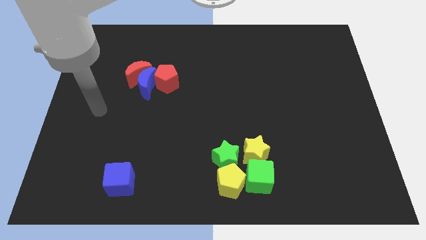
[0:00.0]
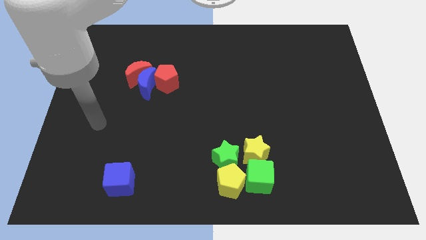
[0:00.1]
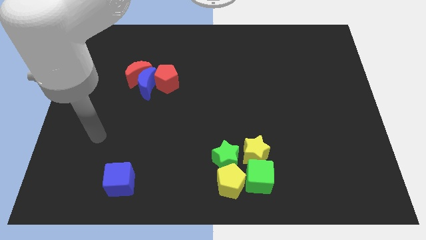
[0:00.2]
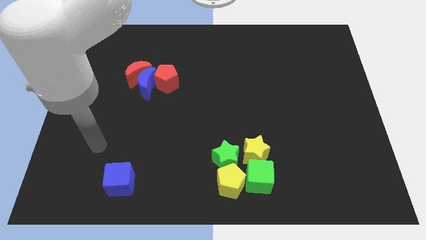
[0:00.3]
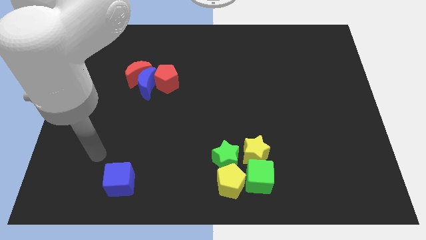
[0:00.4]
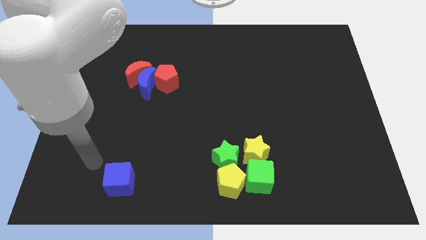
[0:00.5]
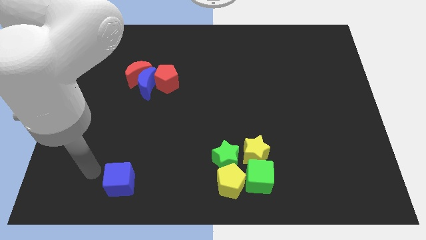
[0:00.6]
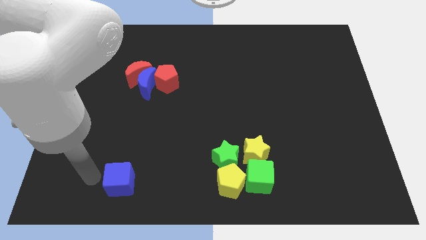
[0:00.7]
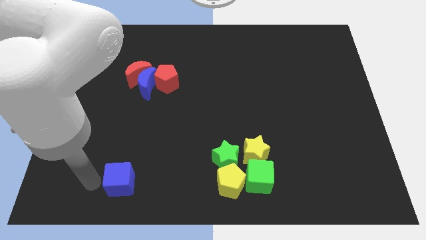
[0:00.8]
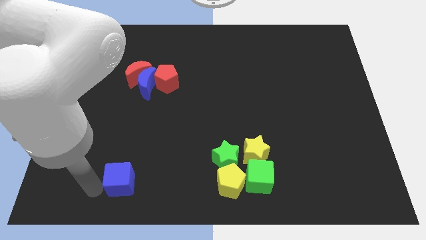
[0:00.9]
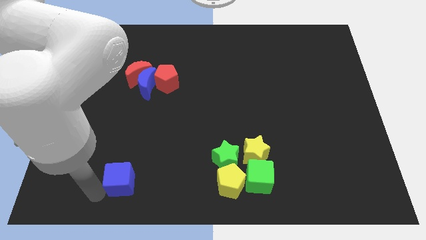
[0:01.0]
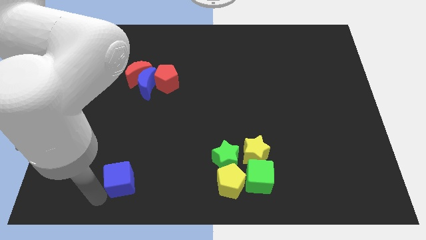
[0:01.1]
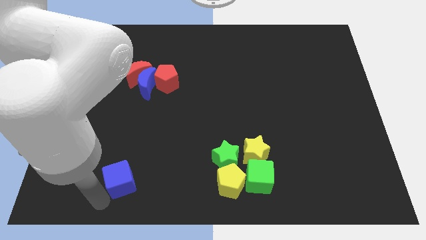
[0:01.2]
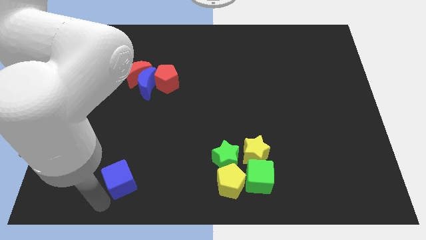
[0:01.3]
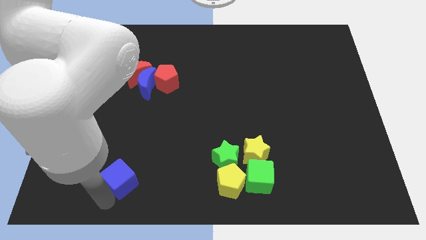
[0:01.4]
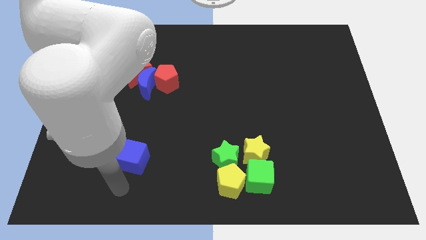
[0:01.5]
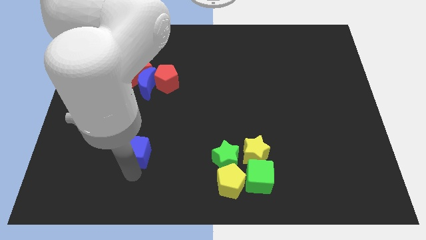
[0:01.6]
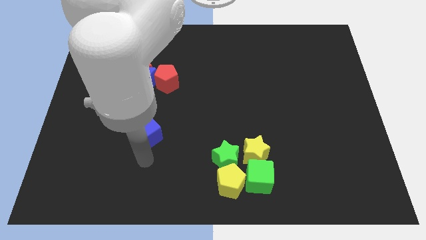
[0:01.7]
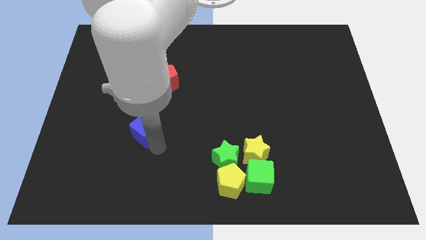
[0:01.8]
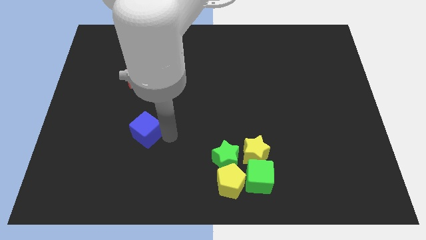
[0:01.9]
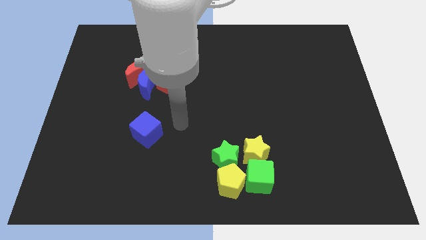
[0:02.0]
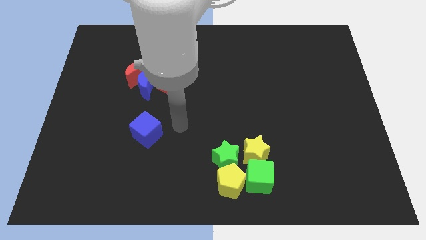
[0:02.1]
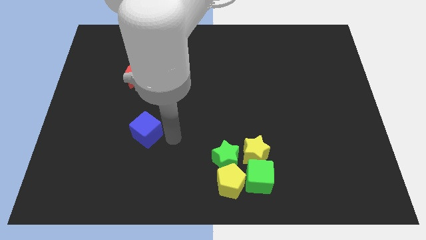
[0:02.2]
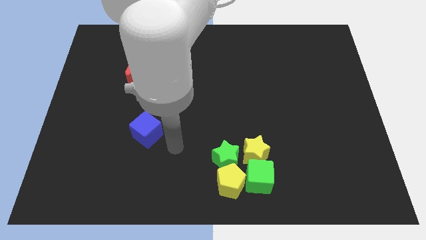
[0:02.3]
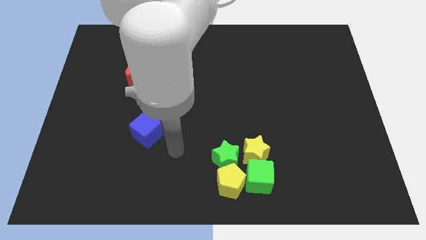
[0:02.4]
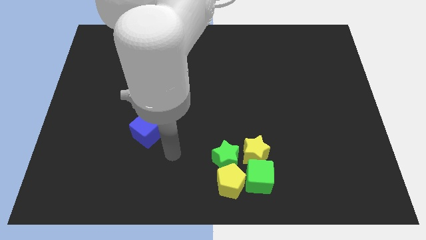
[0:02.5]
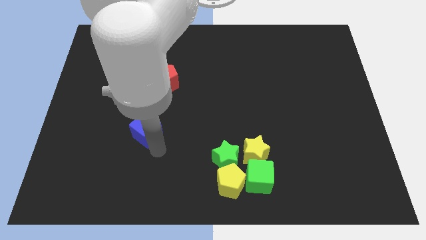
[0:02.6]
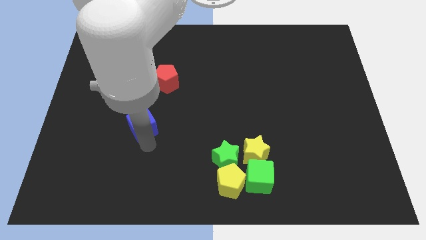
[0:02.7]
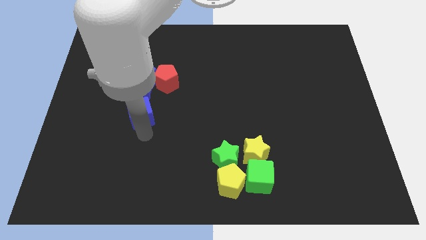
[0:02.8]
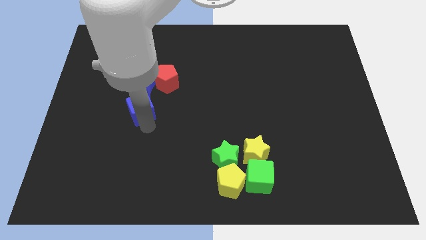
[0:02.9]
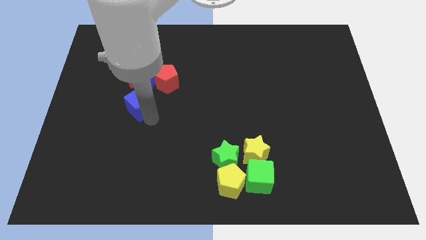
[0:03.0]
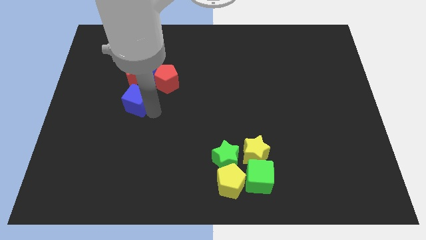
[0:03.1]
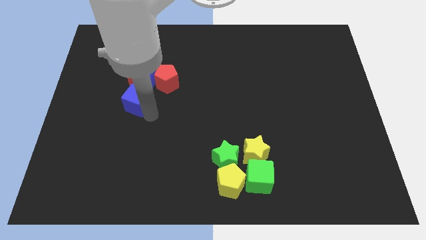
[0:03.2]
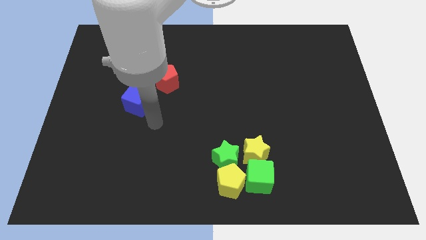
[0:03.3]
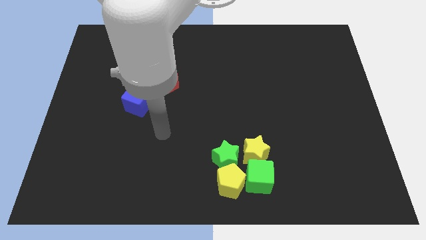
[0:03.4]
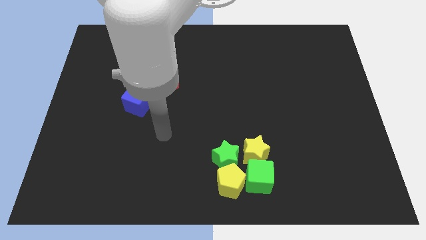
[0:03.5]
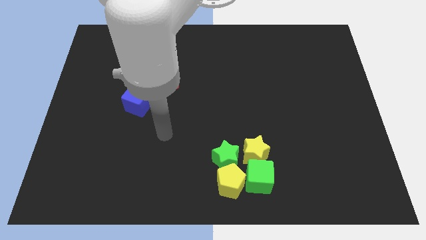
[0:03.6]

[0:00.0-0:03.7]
add the blue cube to the both red blocks and blue crescent

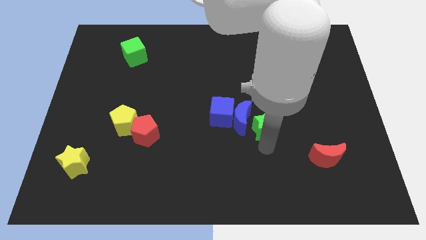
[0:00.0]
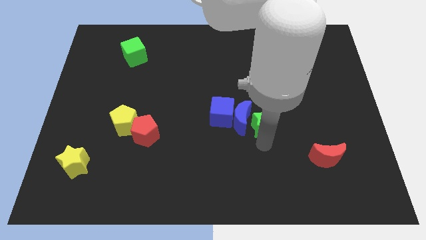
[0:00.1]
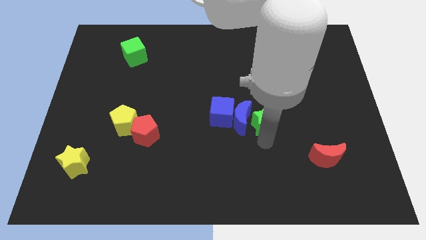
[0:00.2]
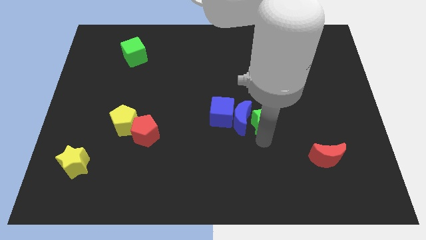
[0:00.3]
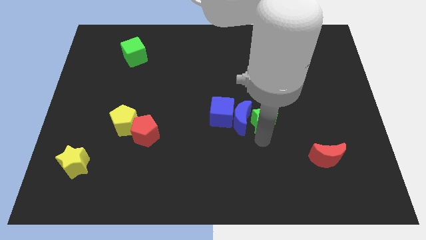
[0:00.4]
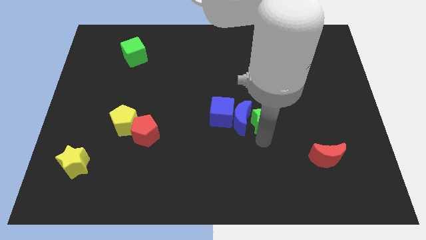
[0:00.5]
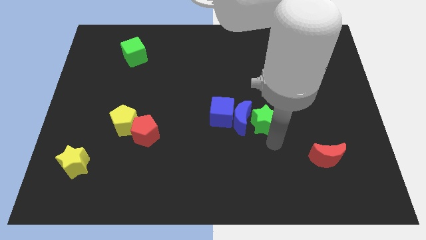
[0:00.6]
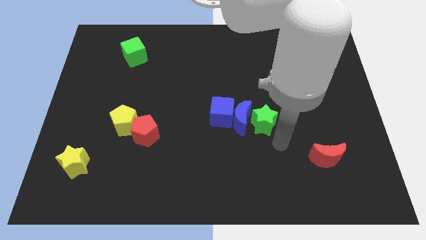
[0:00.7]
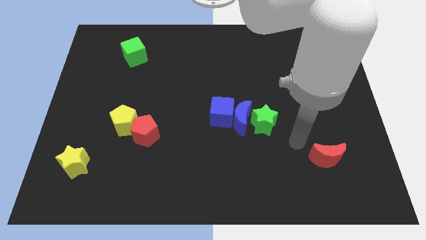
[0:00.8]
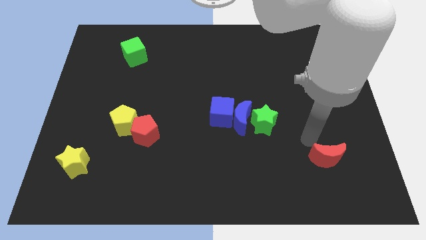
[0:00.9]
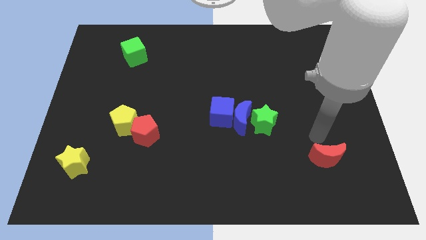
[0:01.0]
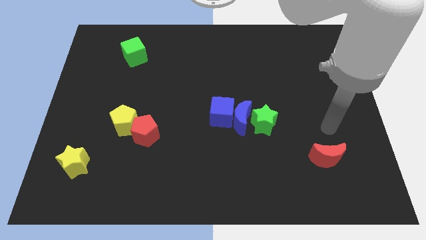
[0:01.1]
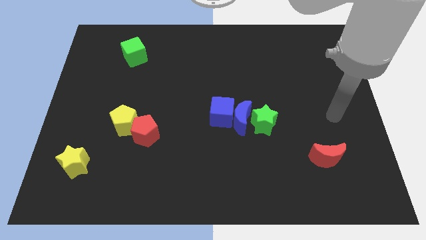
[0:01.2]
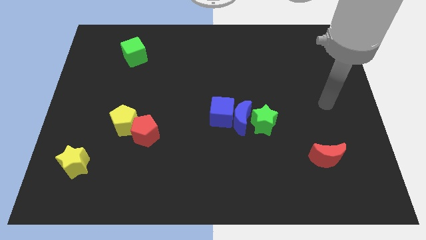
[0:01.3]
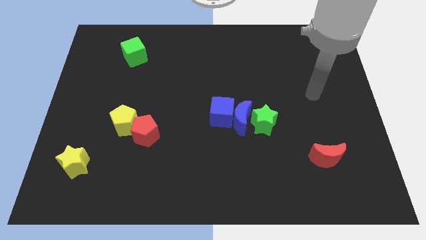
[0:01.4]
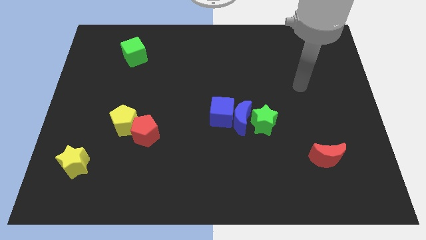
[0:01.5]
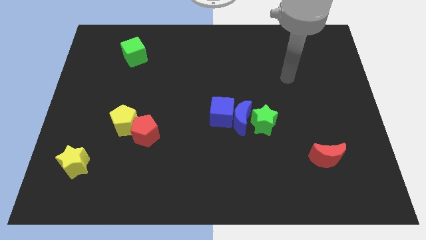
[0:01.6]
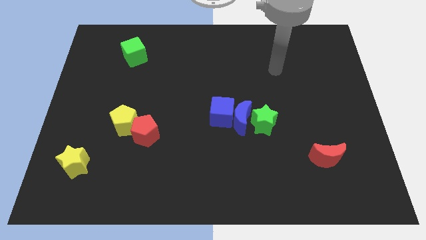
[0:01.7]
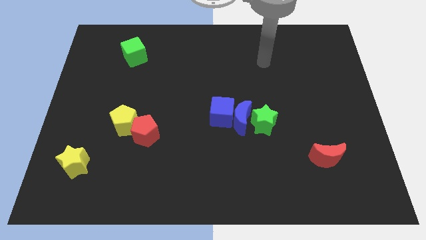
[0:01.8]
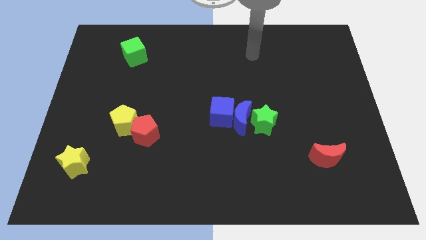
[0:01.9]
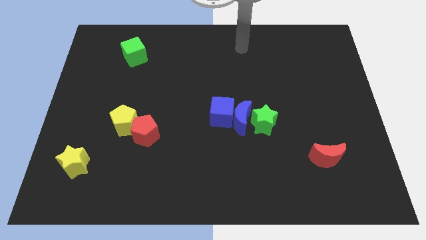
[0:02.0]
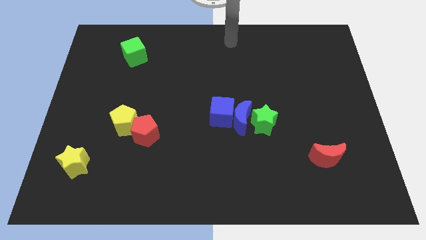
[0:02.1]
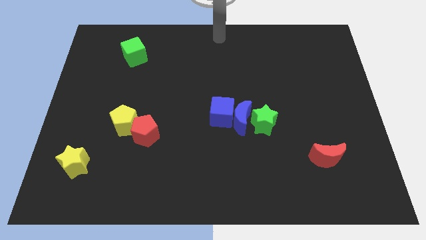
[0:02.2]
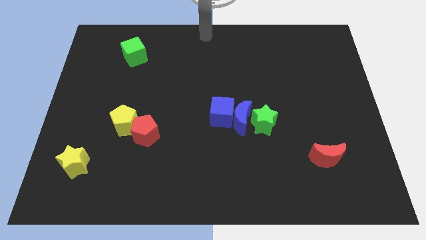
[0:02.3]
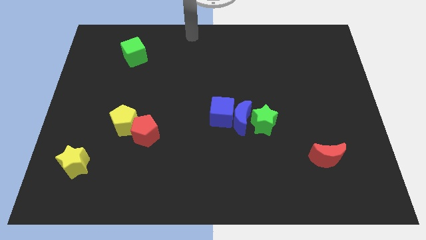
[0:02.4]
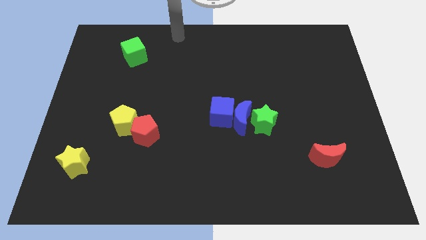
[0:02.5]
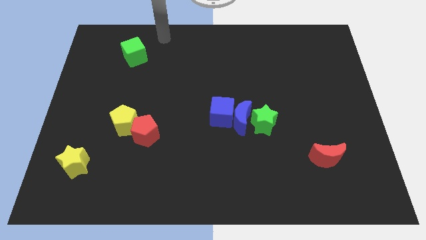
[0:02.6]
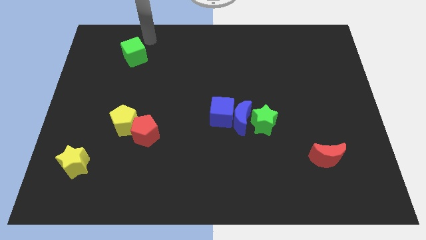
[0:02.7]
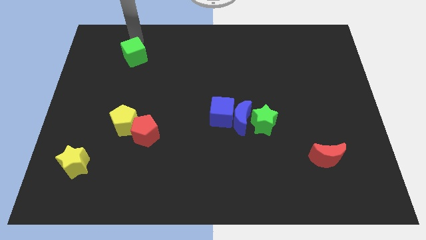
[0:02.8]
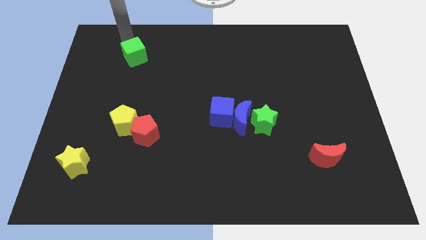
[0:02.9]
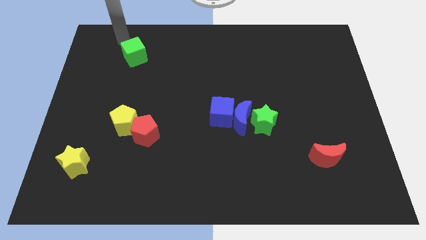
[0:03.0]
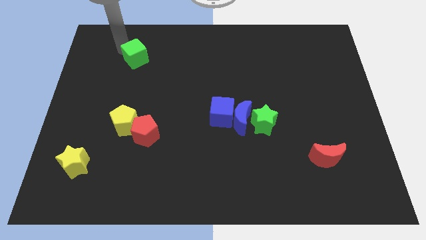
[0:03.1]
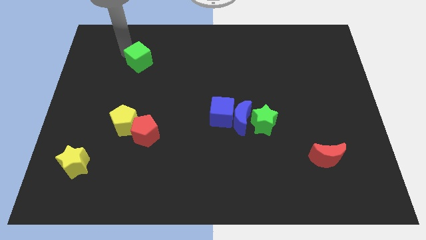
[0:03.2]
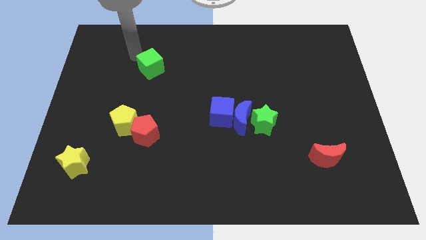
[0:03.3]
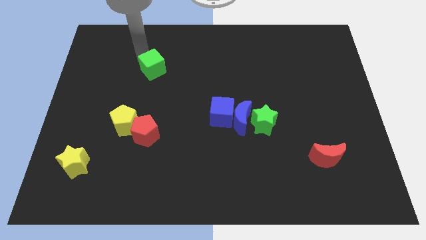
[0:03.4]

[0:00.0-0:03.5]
move the green block to the top of the red pentagon

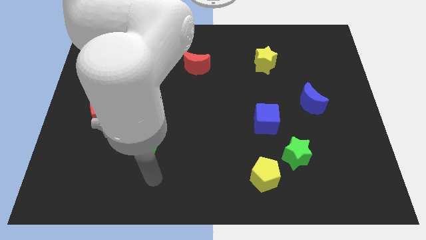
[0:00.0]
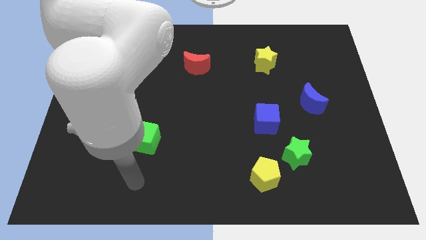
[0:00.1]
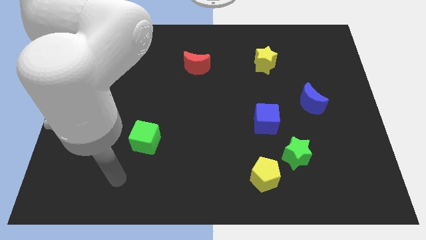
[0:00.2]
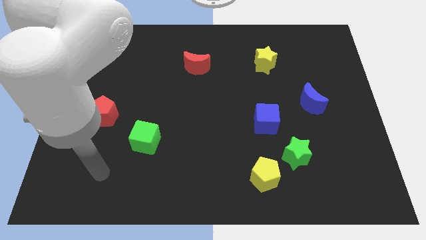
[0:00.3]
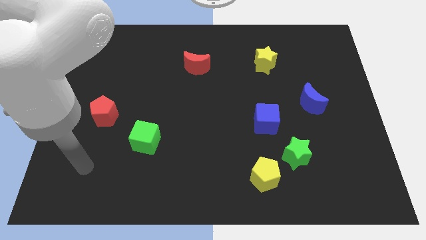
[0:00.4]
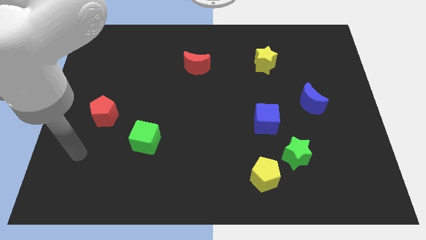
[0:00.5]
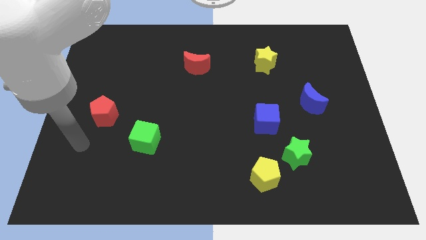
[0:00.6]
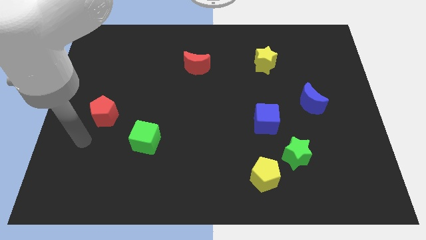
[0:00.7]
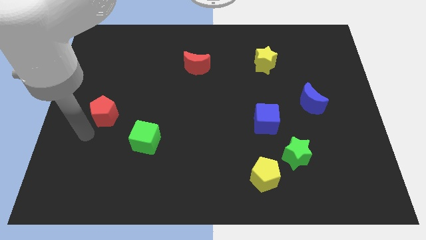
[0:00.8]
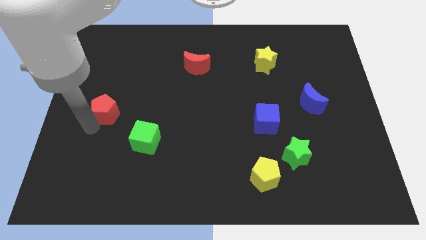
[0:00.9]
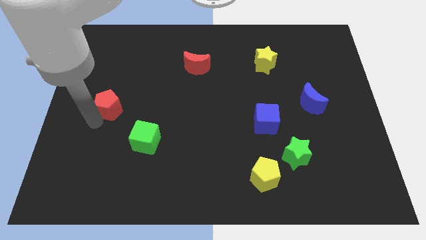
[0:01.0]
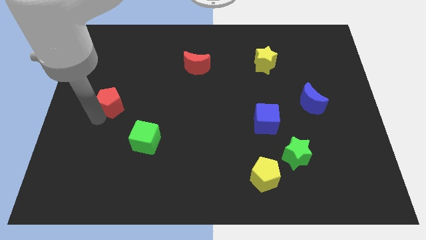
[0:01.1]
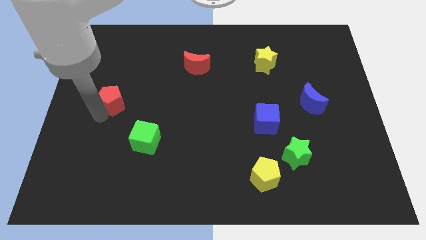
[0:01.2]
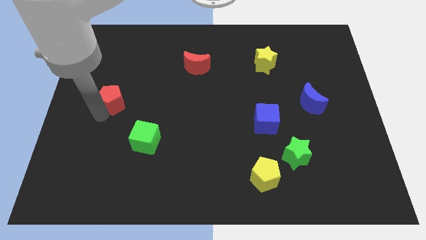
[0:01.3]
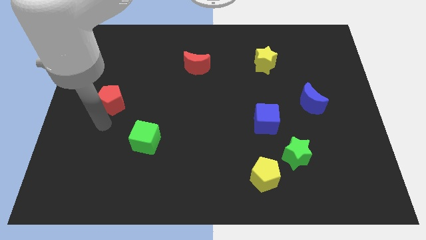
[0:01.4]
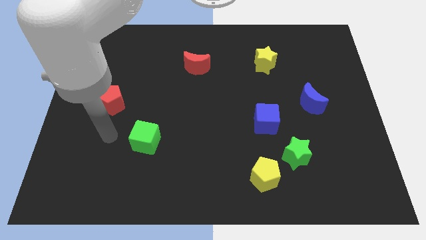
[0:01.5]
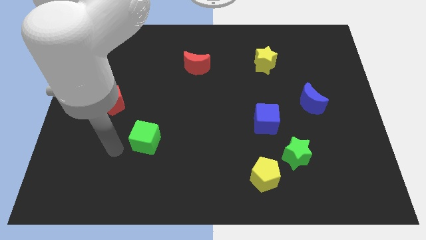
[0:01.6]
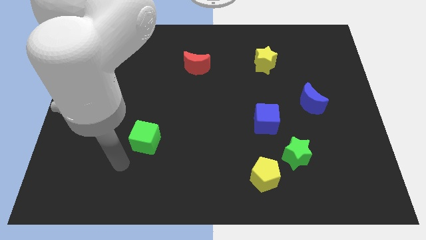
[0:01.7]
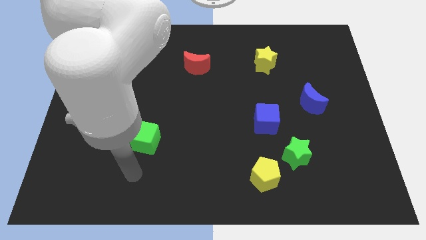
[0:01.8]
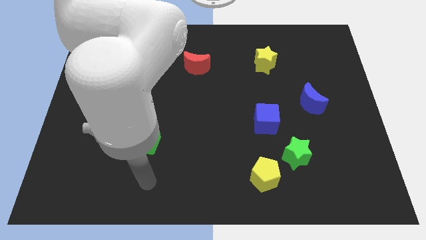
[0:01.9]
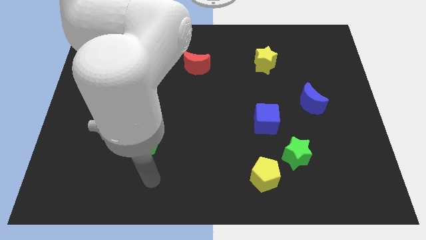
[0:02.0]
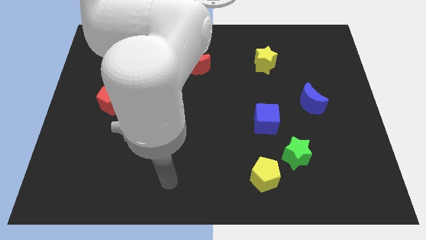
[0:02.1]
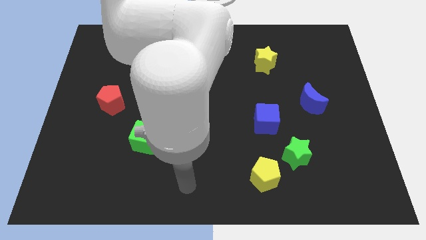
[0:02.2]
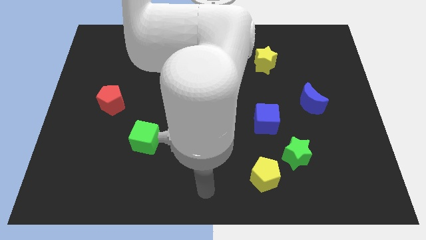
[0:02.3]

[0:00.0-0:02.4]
push the red pentagon slightly towards the top
